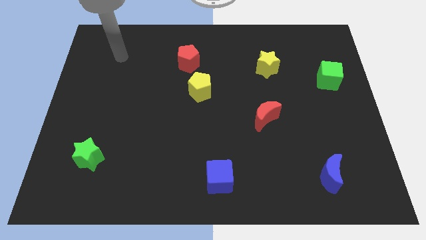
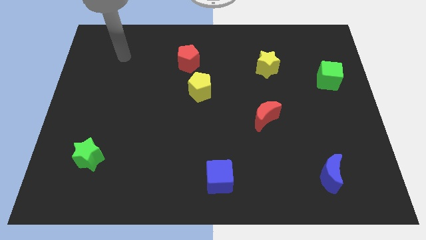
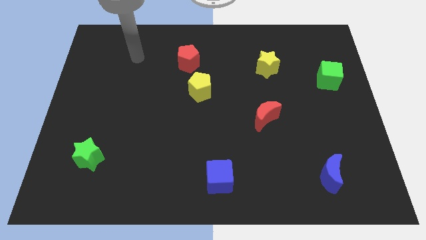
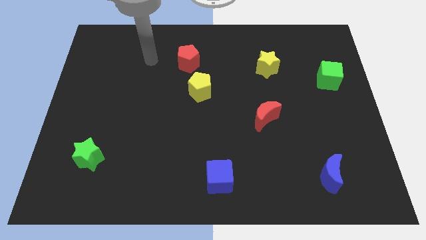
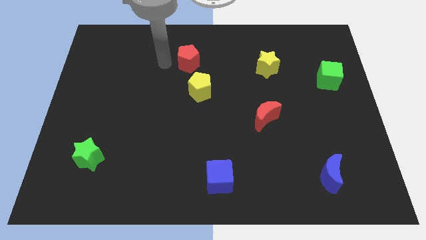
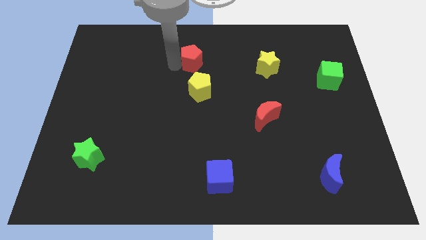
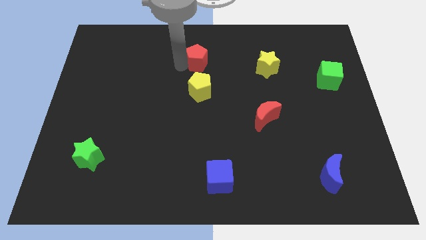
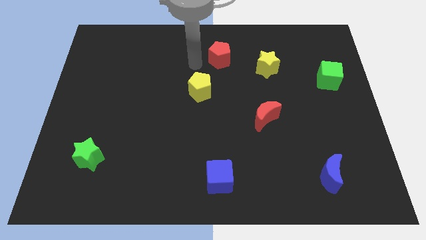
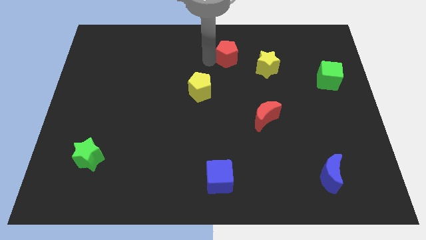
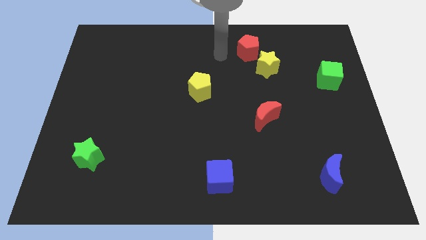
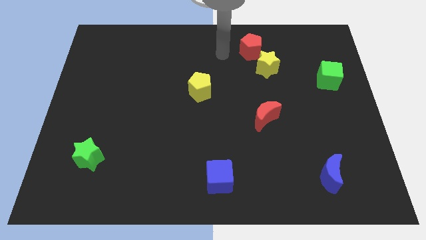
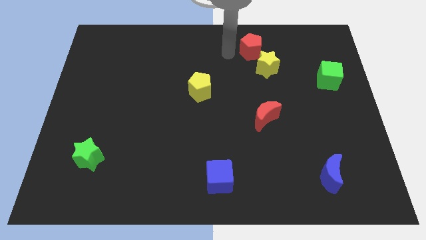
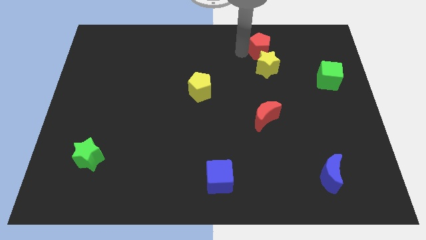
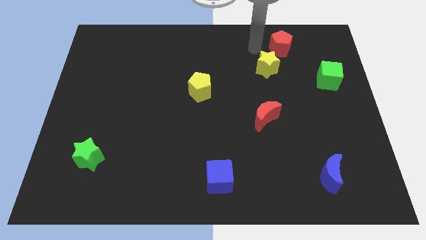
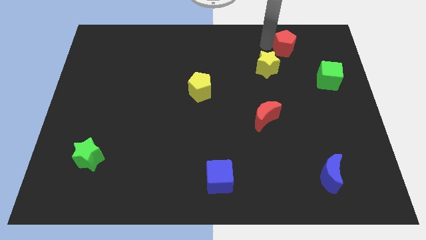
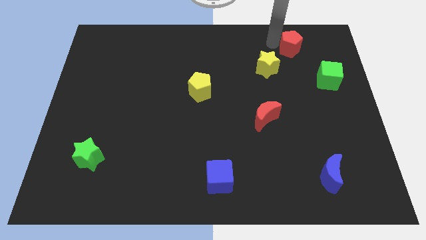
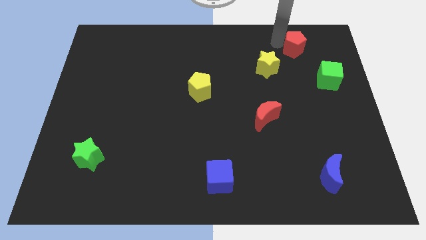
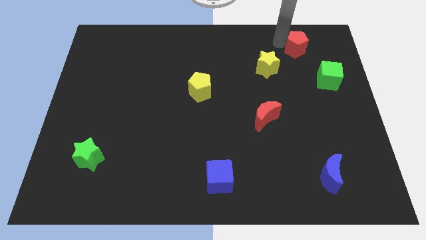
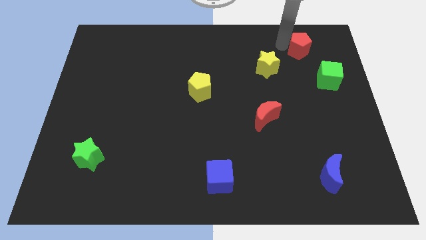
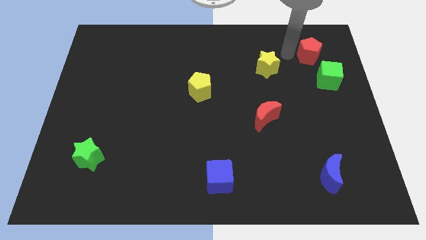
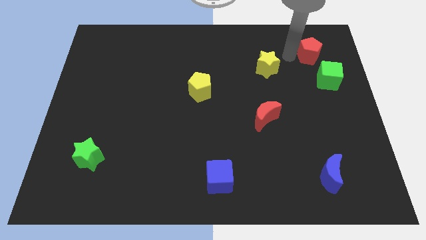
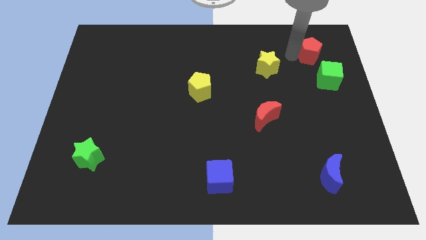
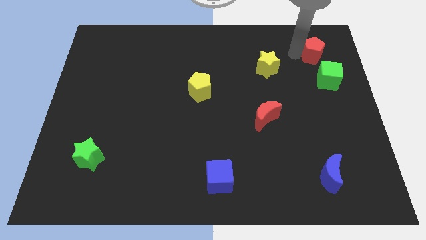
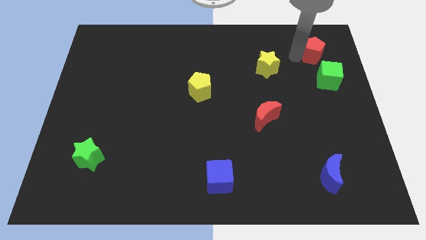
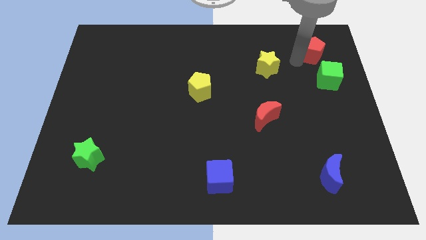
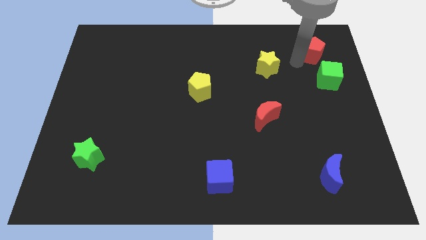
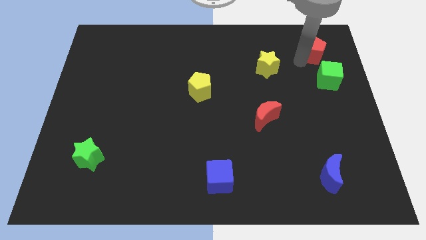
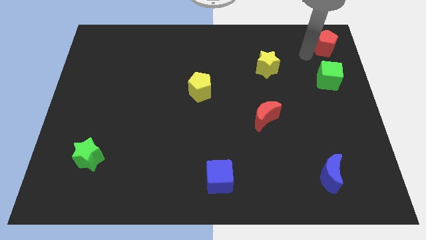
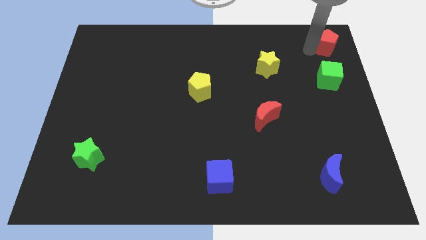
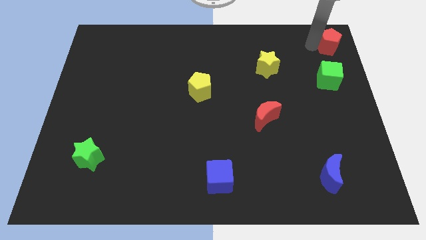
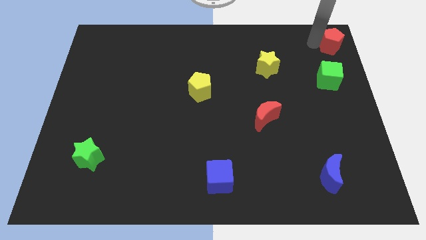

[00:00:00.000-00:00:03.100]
place red pentagon above green cube

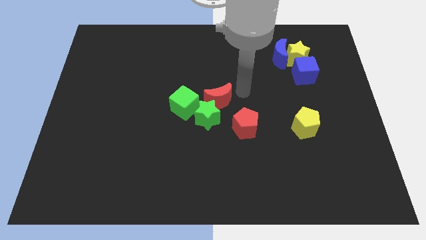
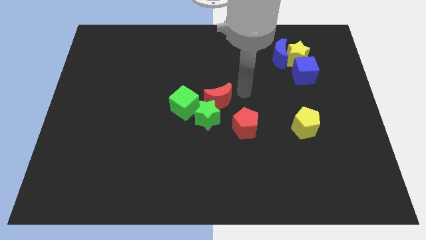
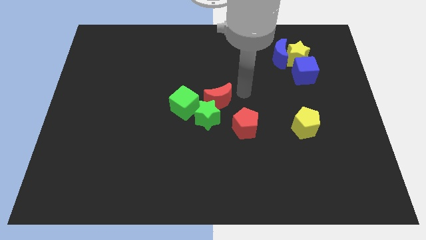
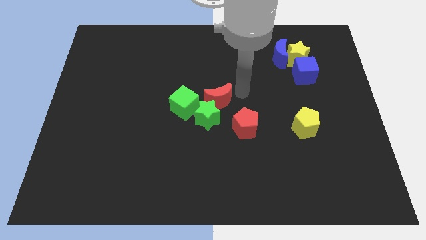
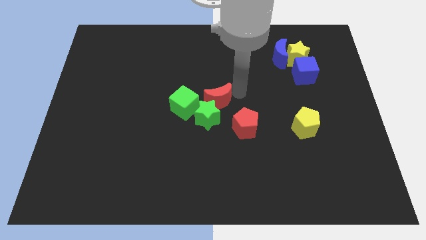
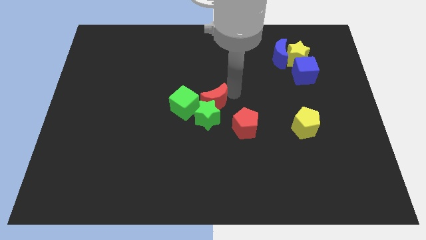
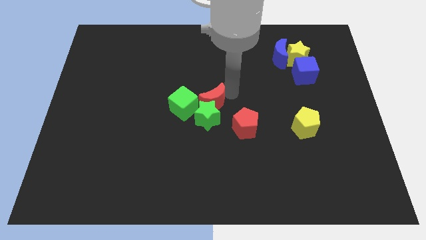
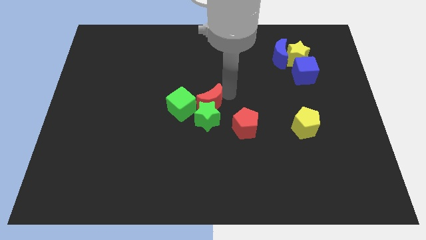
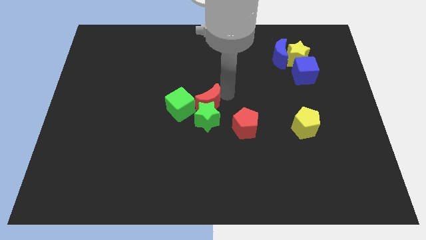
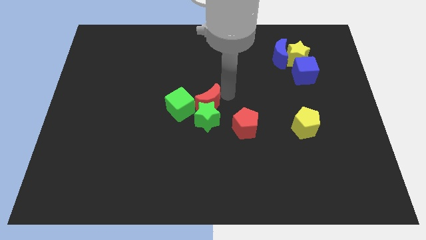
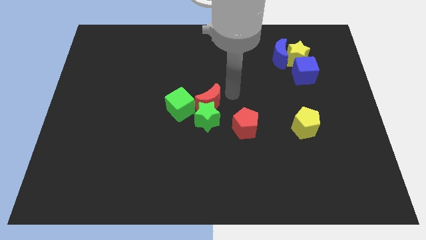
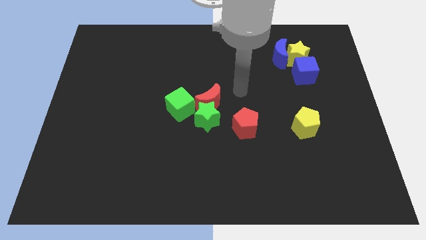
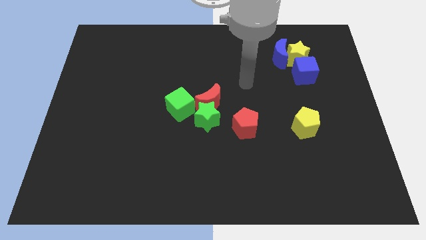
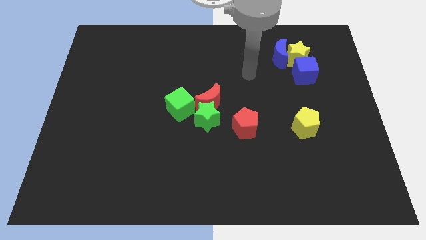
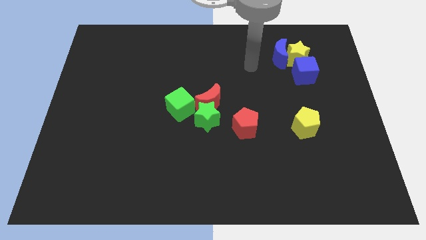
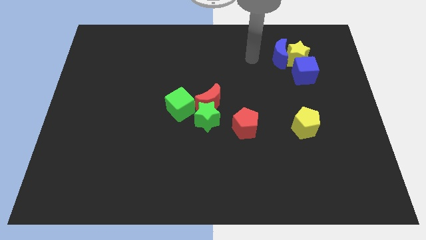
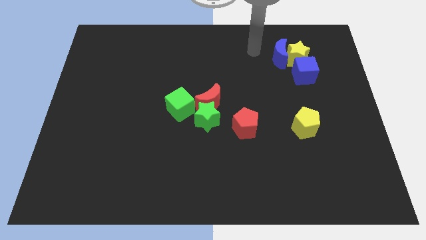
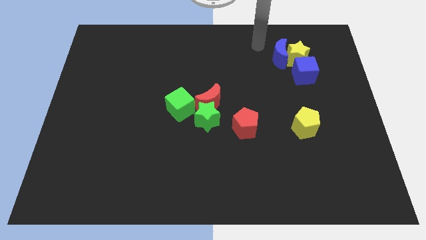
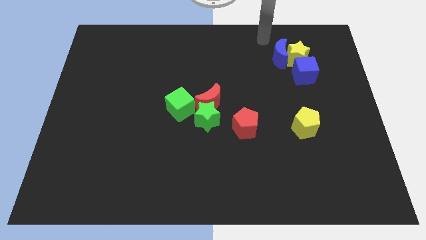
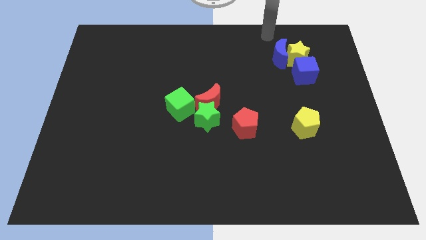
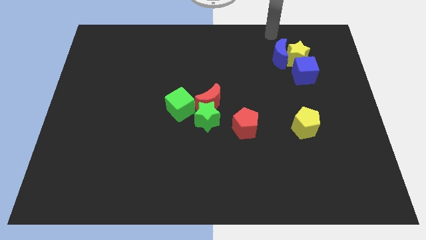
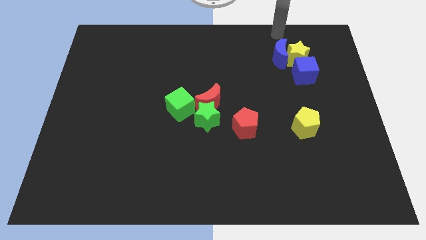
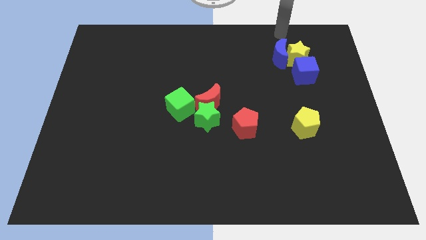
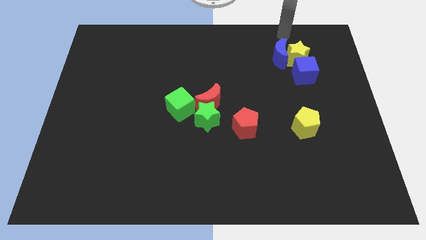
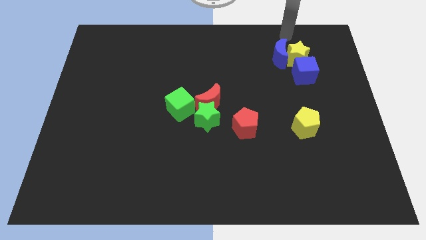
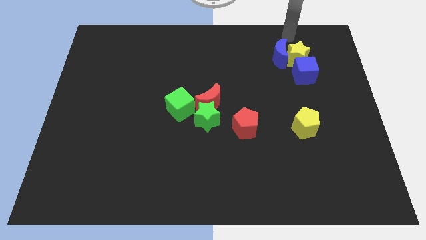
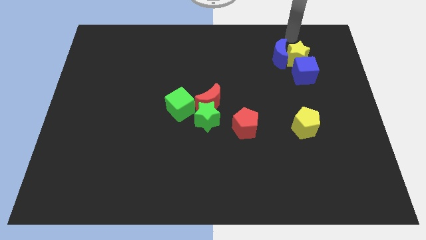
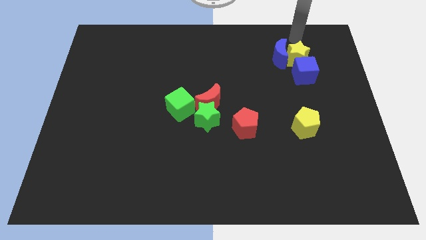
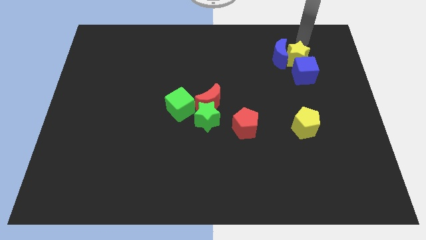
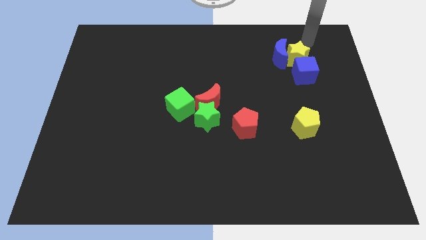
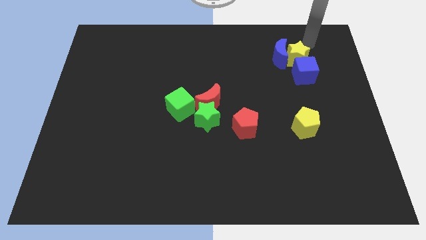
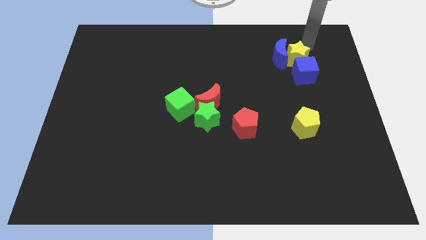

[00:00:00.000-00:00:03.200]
move the arm towards the yellow star

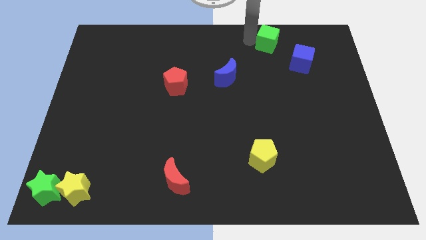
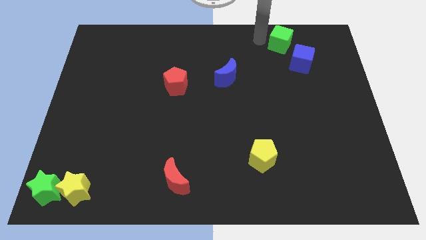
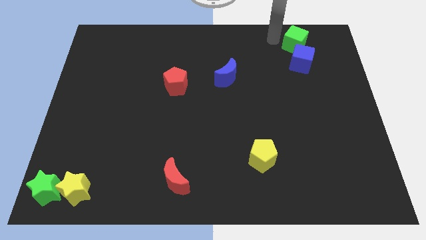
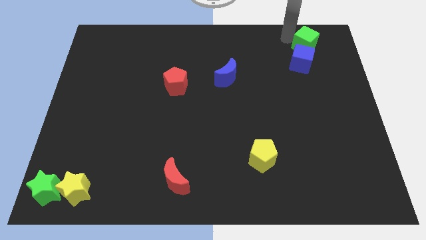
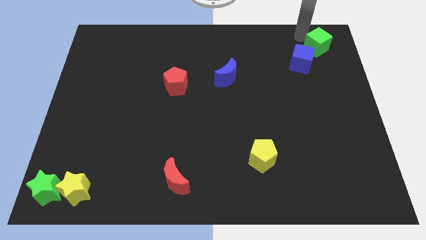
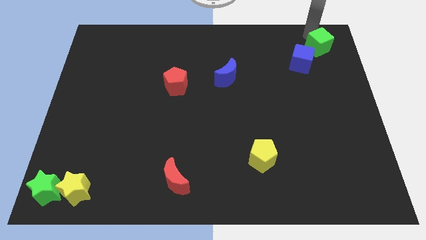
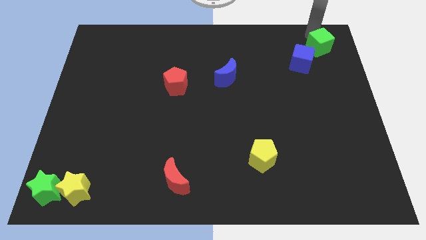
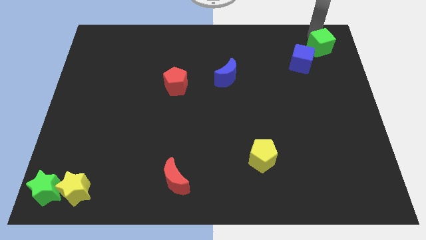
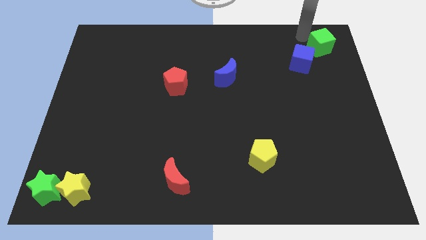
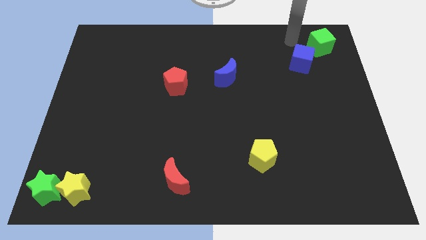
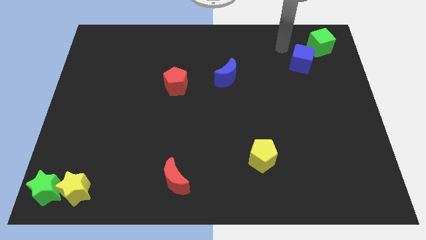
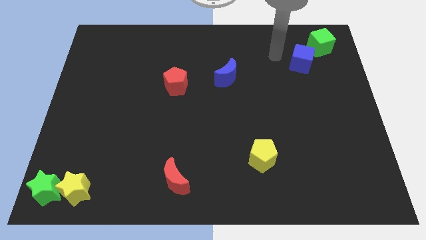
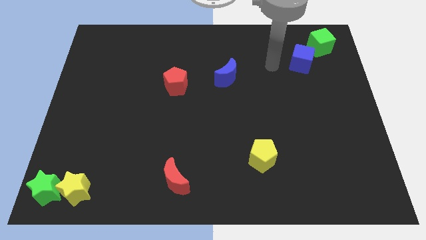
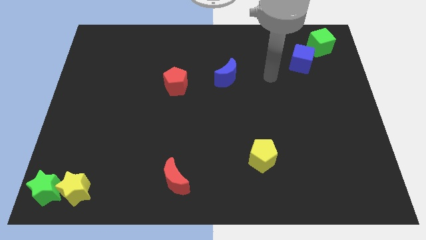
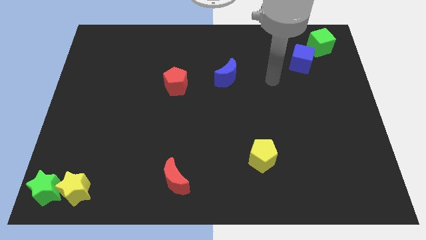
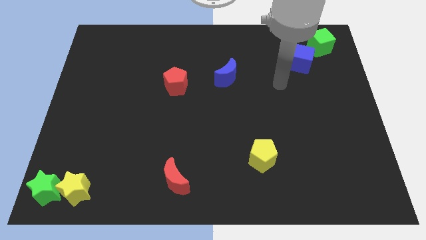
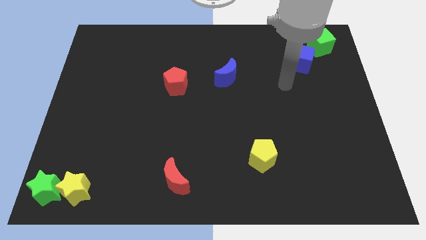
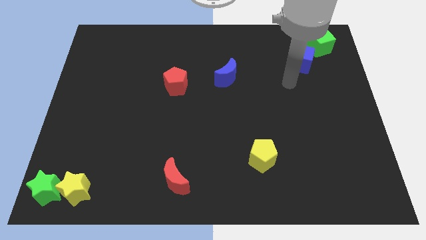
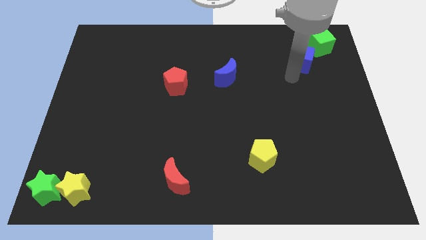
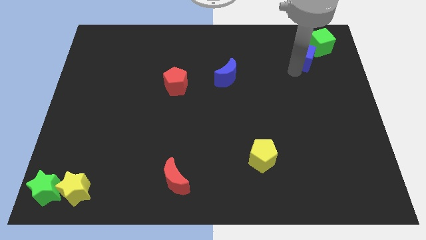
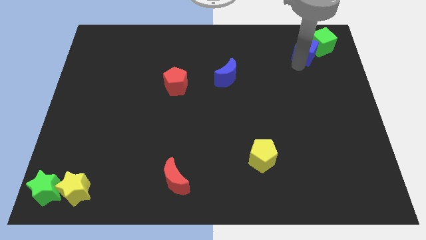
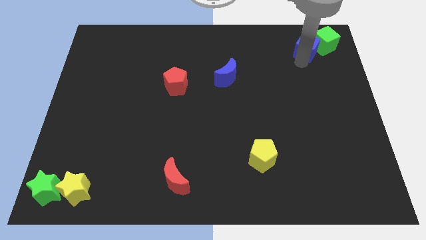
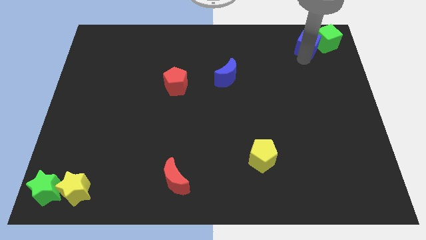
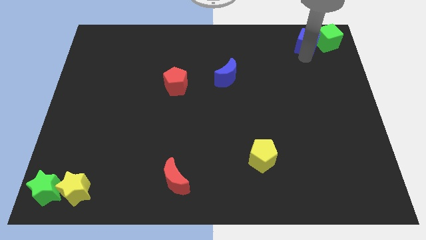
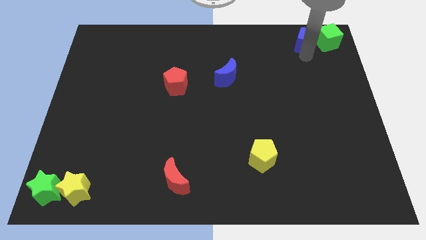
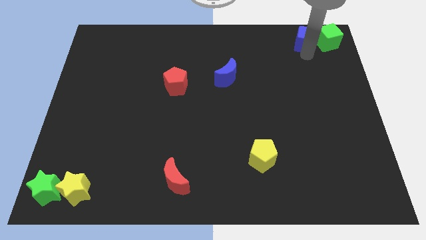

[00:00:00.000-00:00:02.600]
push blue cube into the green cube
